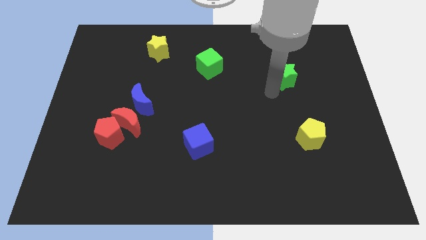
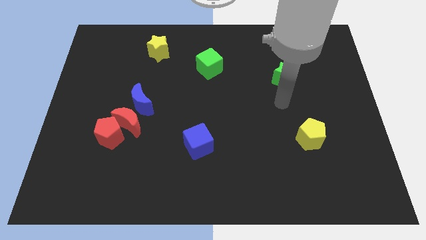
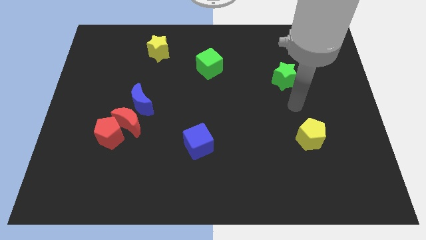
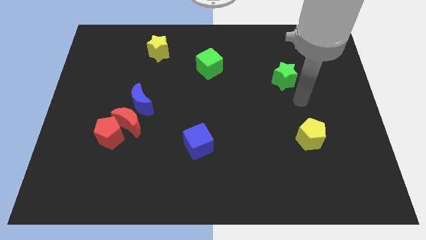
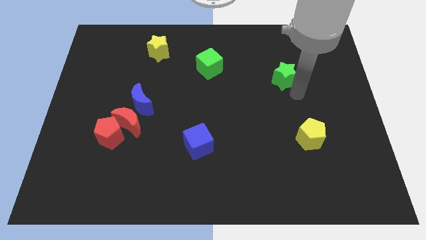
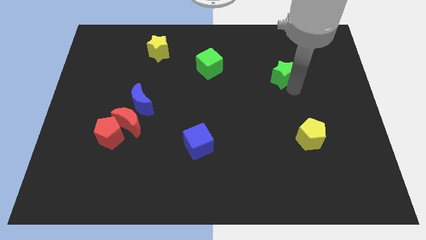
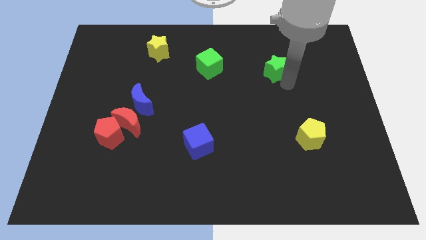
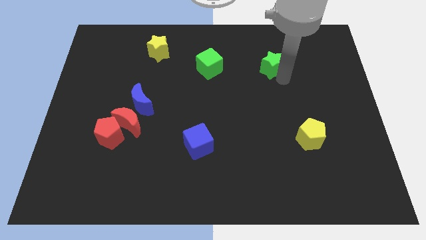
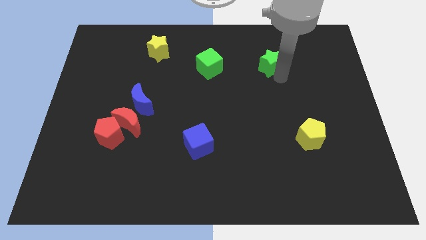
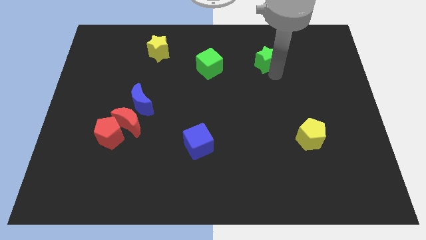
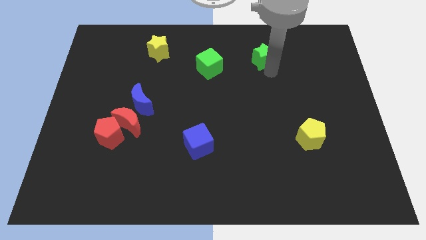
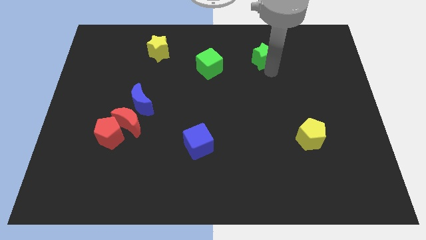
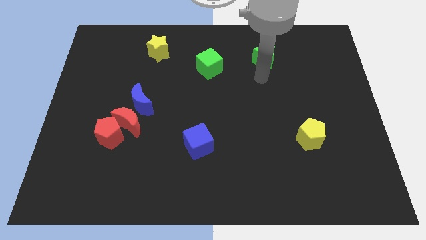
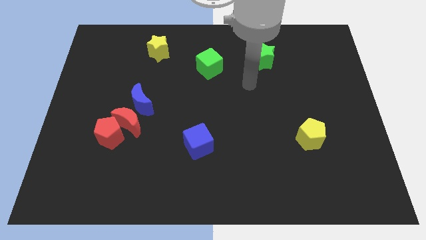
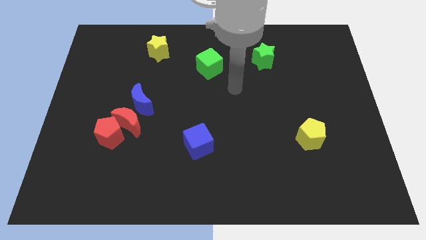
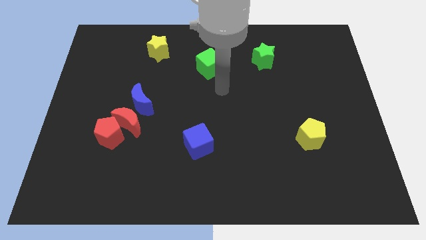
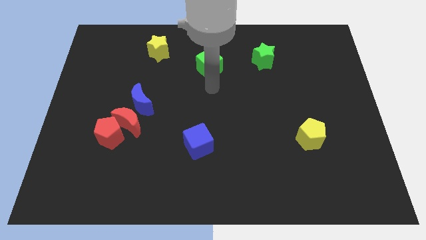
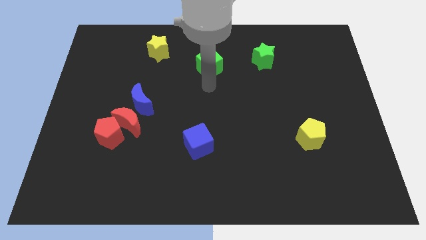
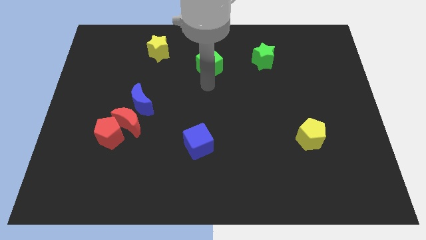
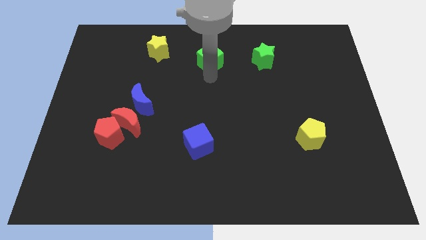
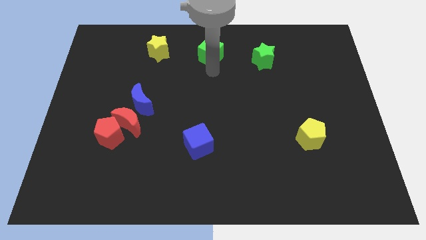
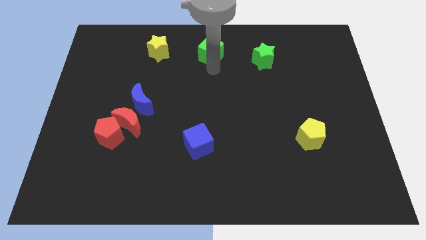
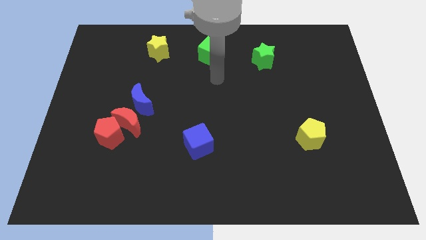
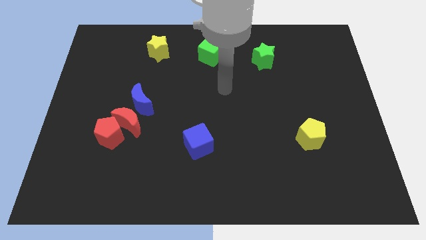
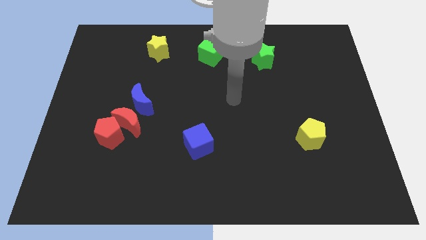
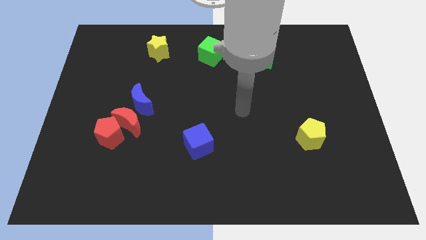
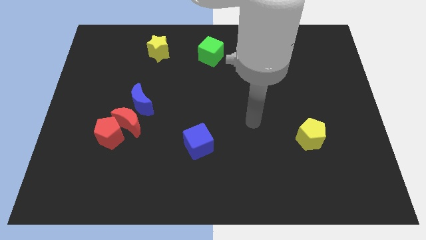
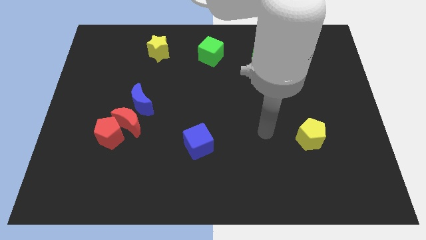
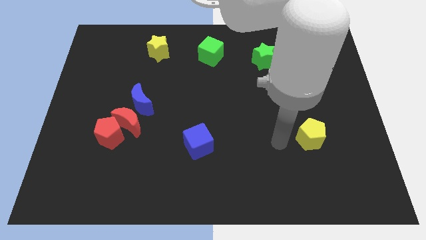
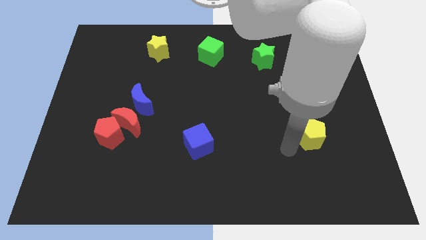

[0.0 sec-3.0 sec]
move green cube towards the top center of the board

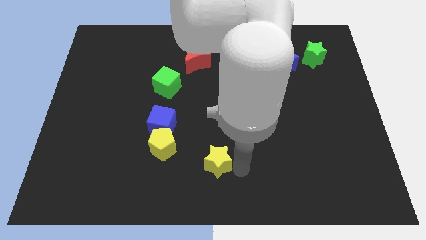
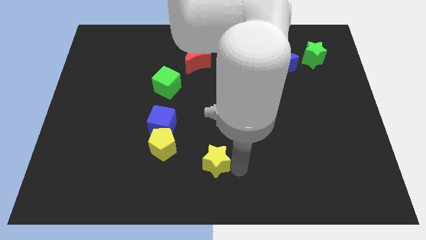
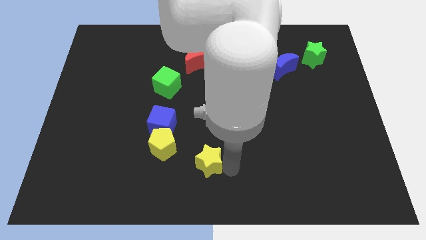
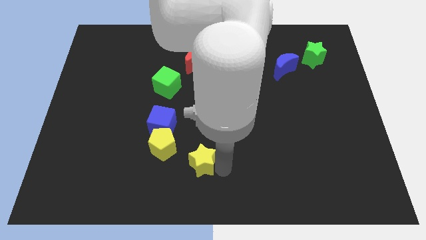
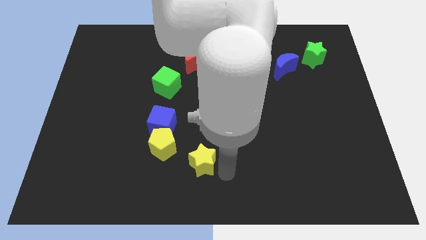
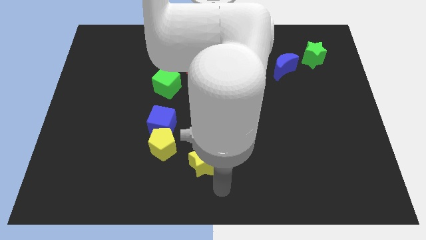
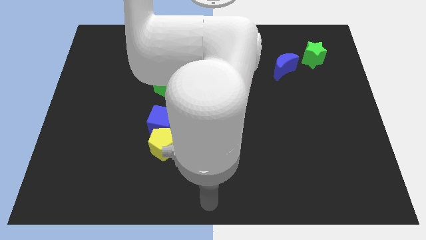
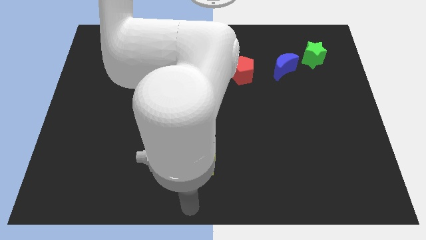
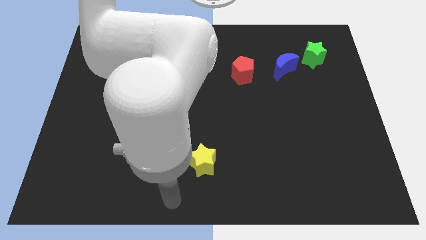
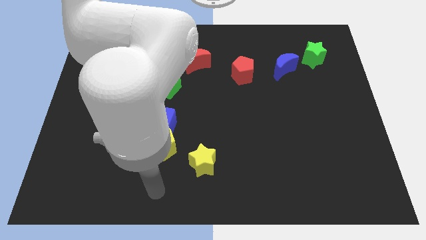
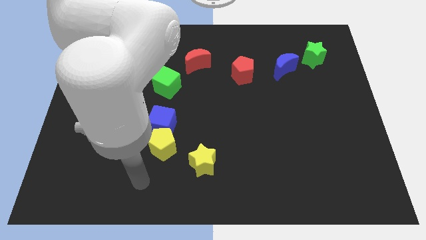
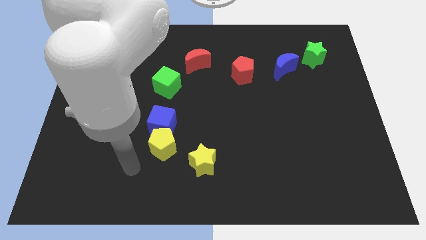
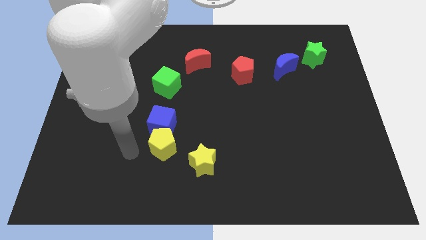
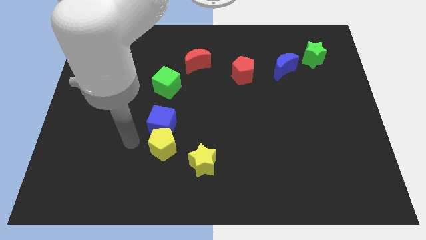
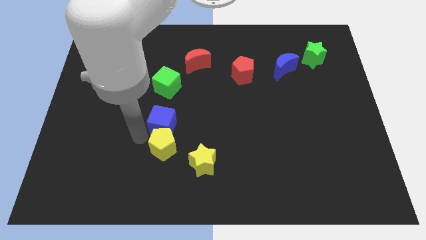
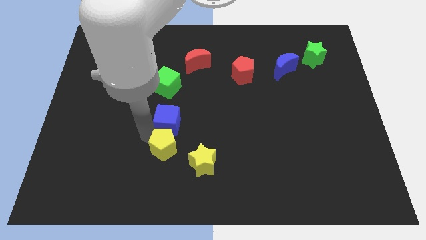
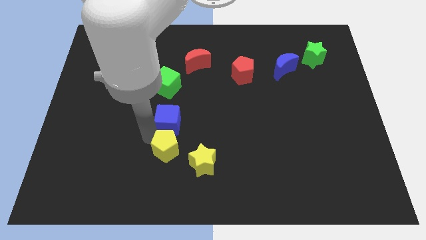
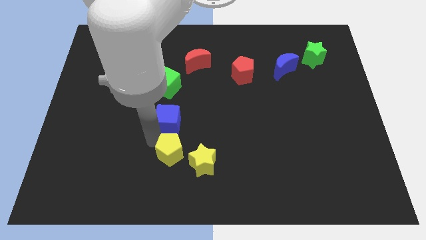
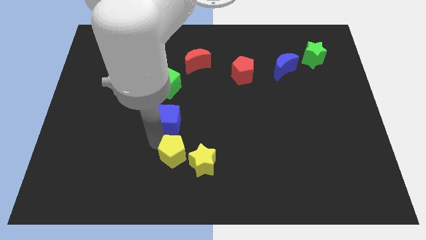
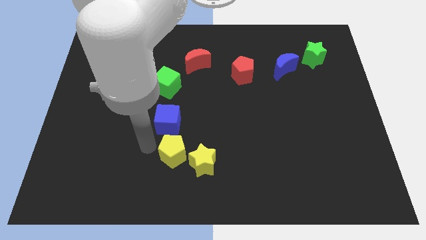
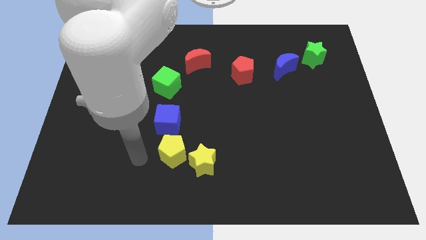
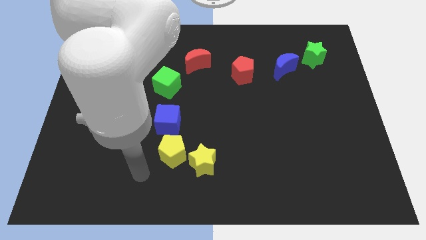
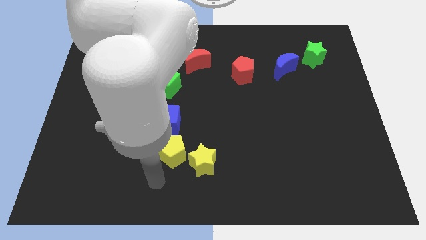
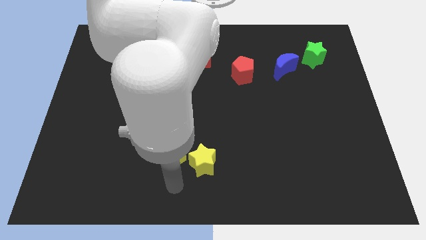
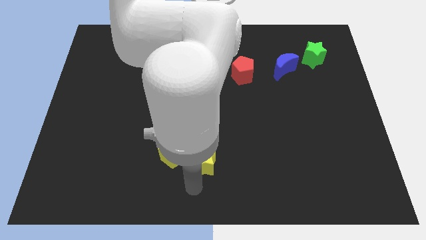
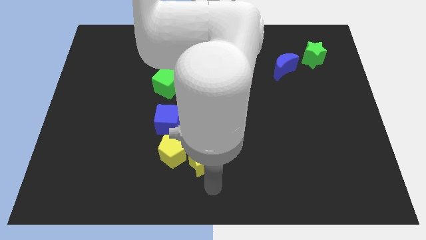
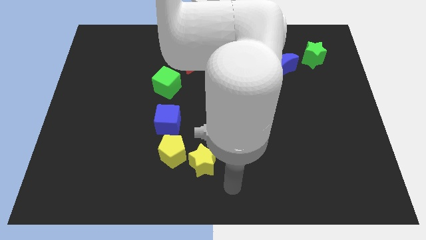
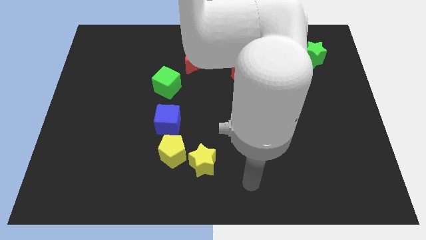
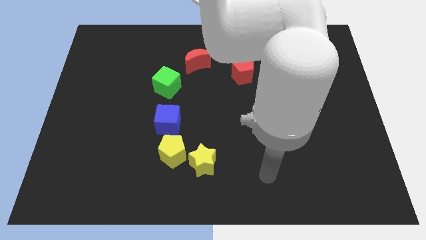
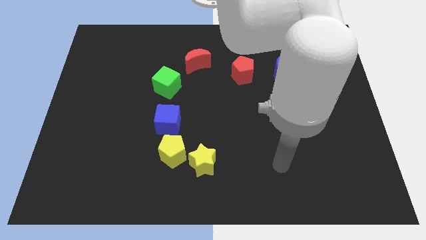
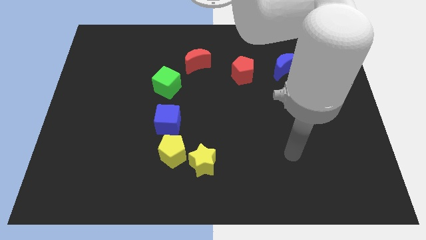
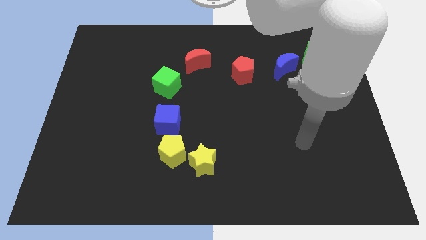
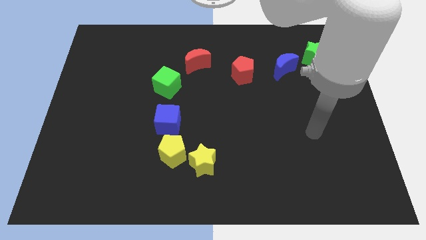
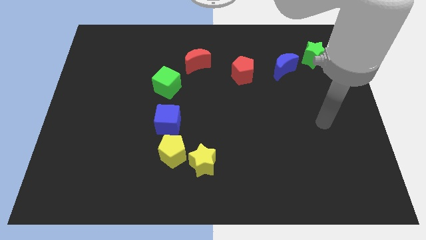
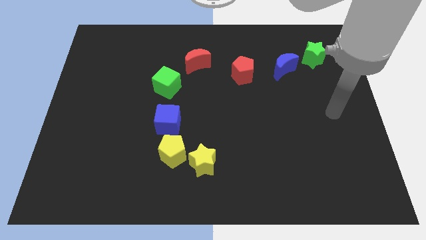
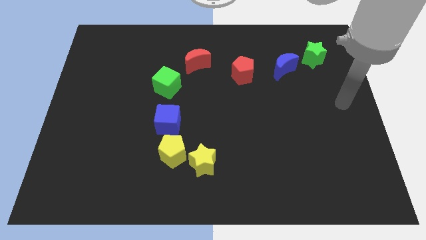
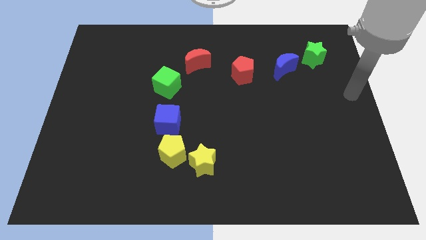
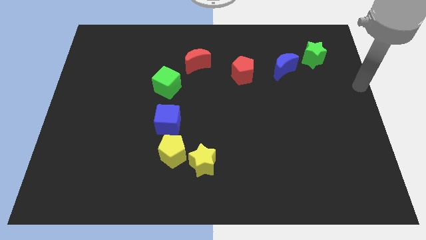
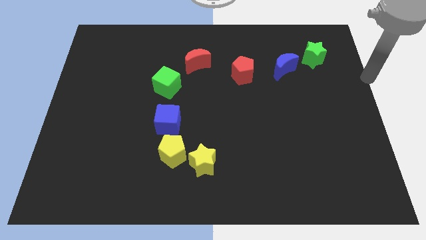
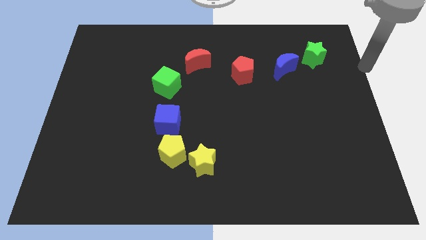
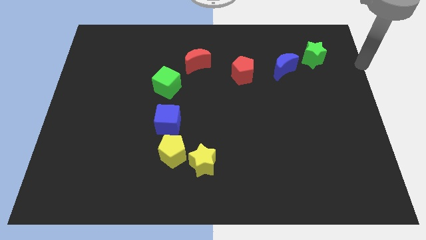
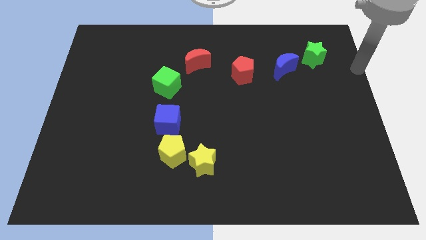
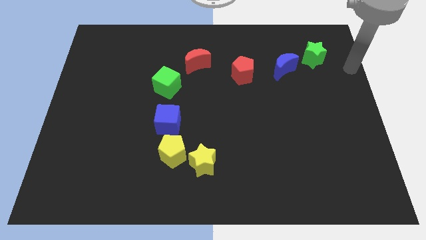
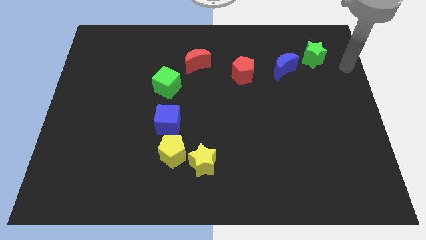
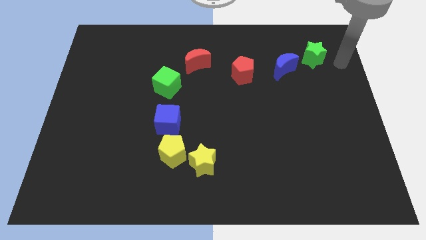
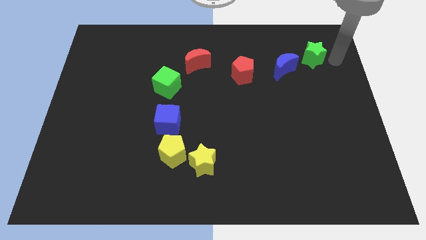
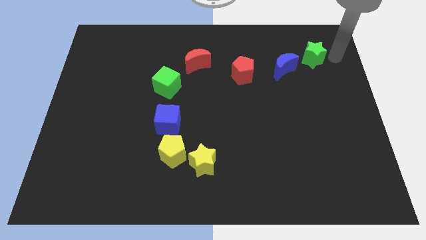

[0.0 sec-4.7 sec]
place yellow star right to yellow pentagon

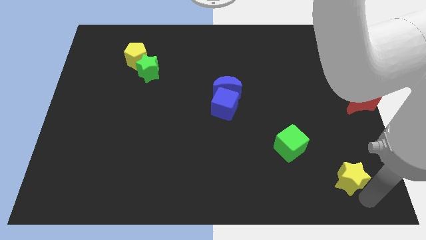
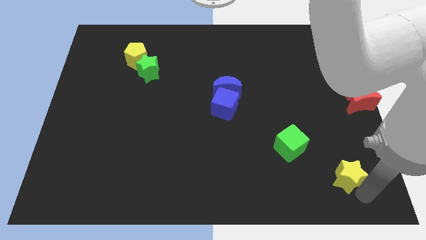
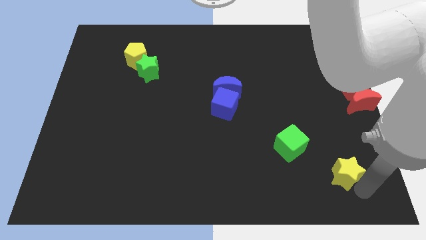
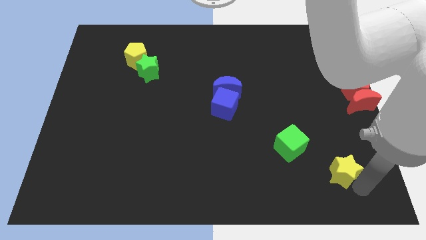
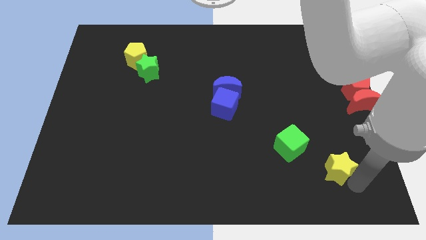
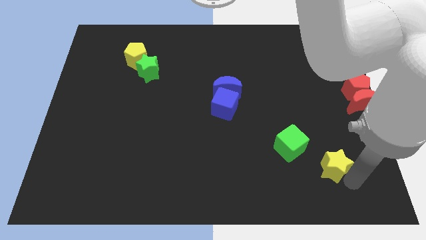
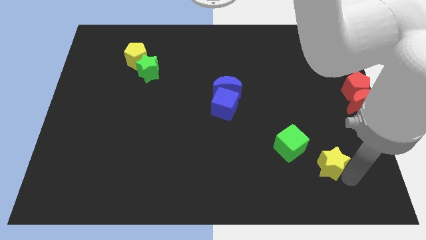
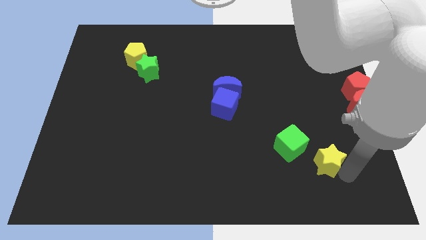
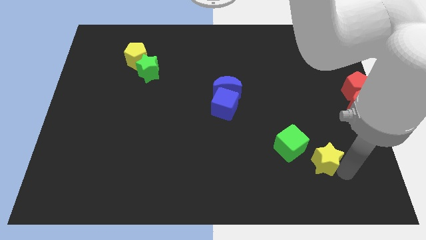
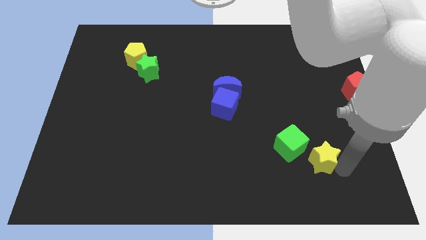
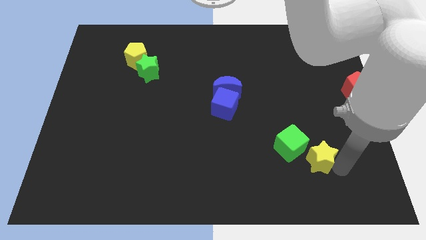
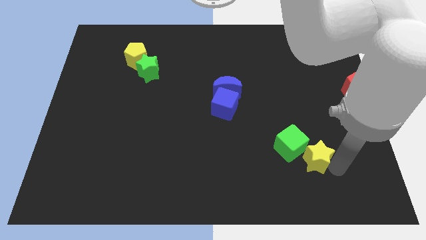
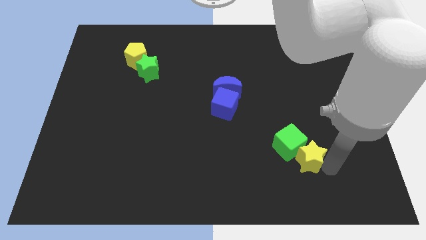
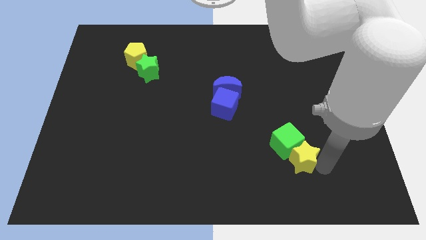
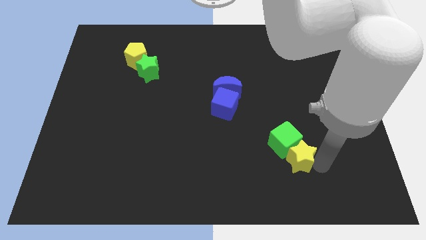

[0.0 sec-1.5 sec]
push the yellow star into the green cube
